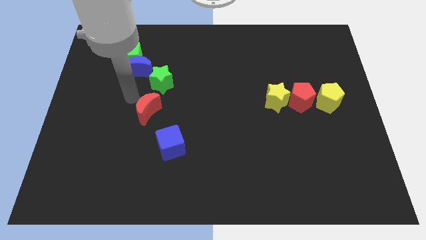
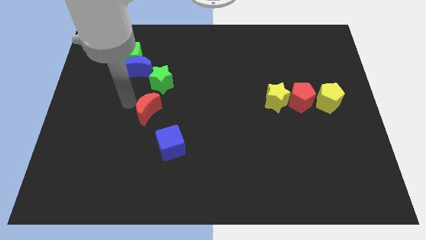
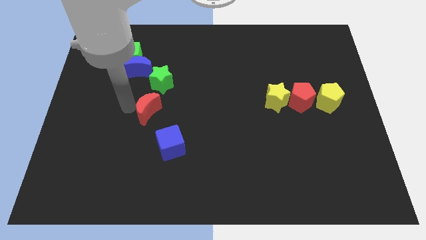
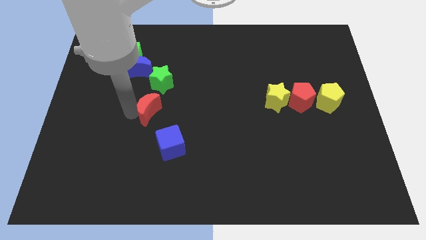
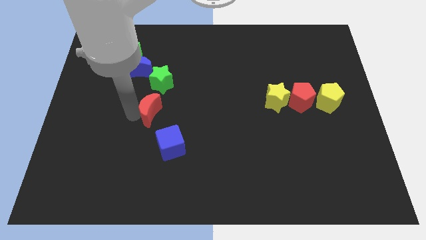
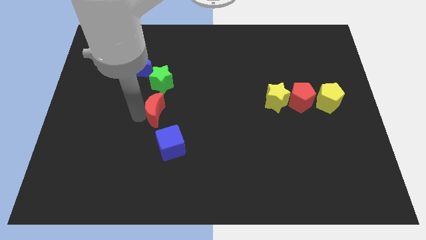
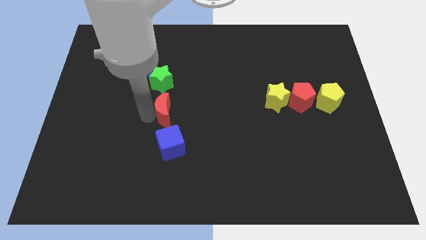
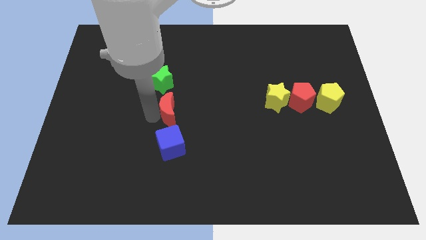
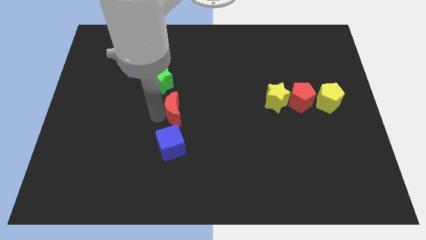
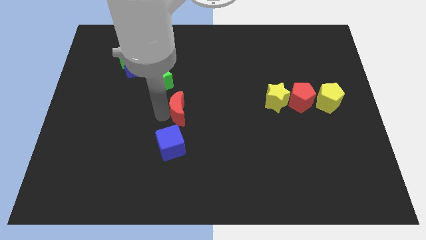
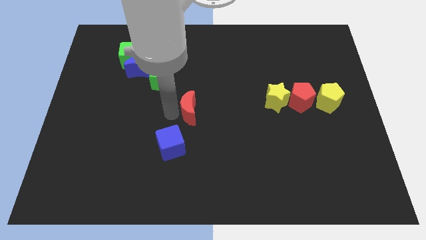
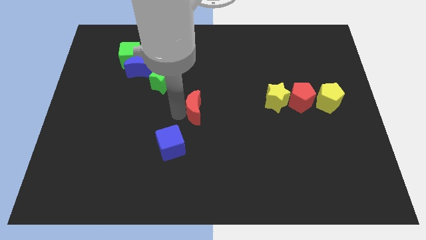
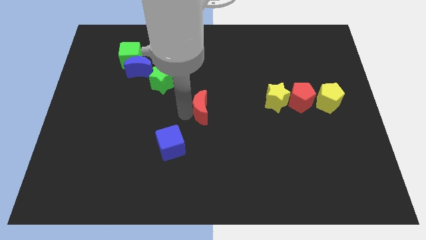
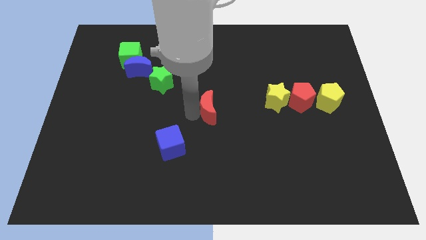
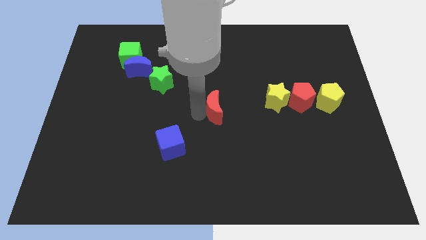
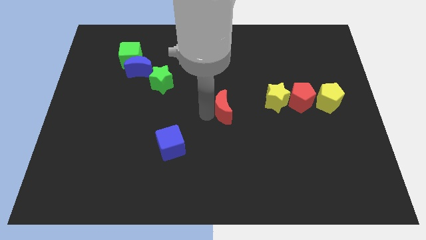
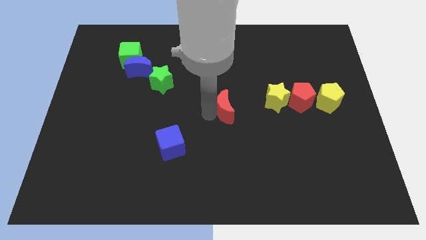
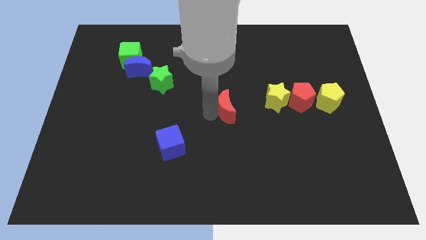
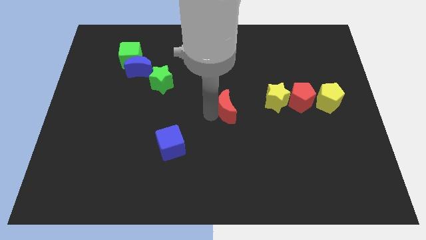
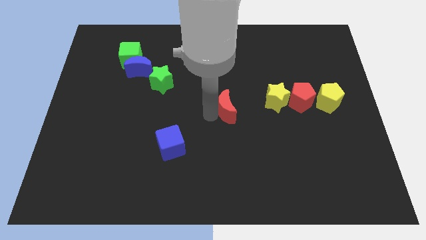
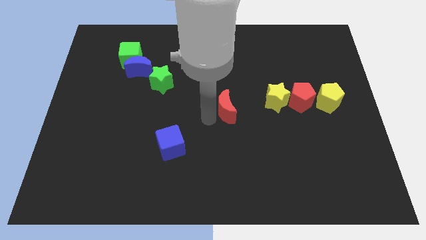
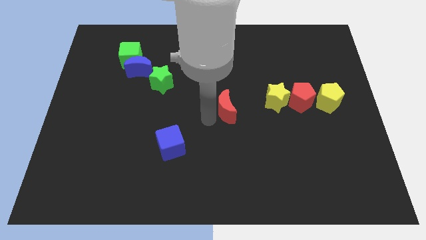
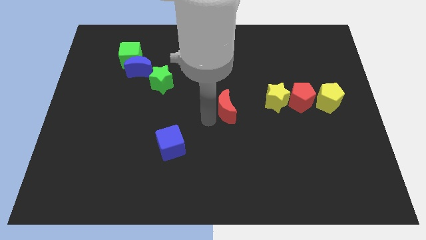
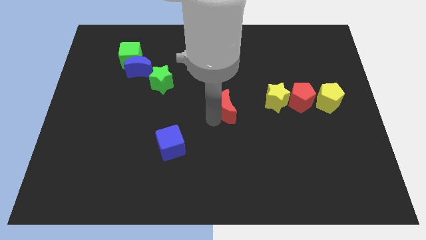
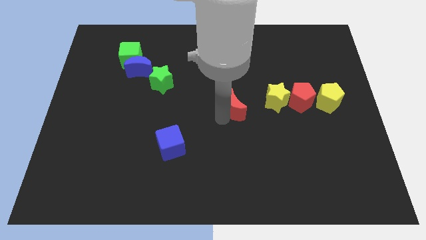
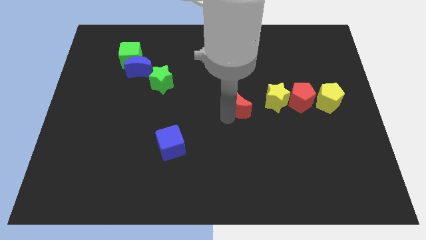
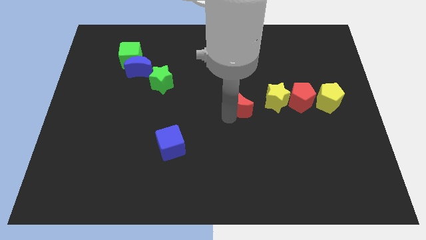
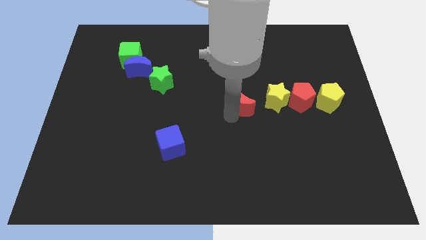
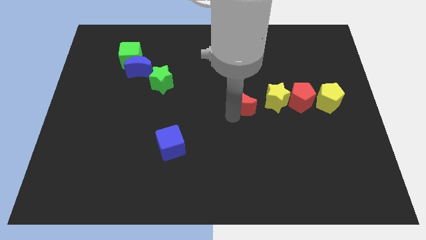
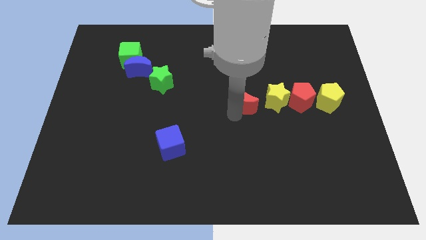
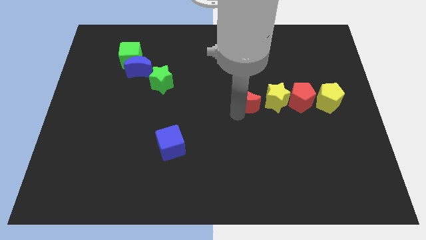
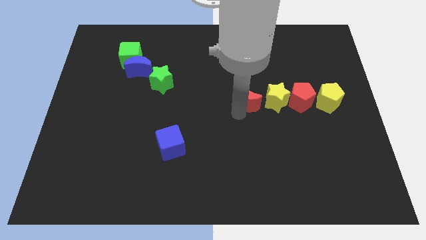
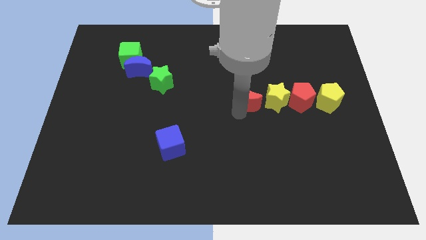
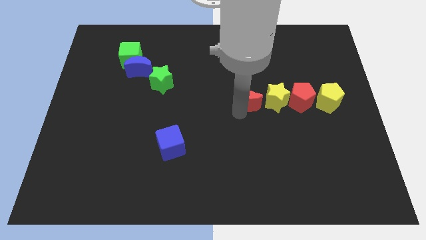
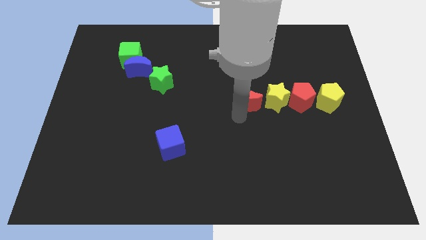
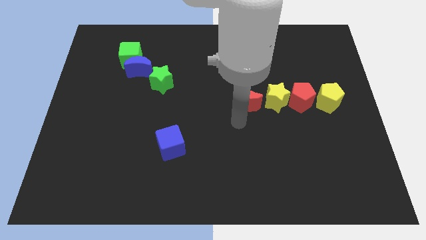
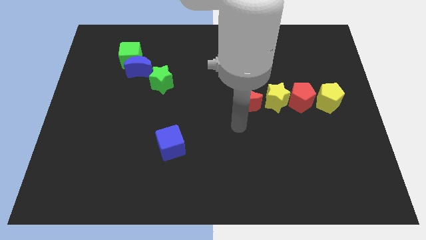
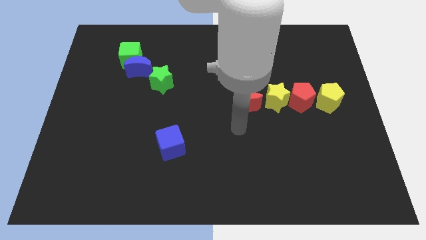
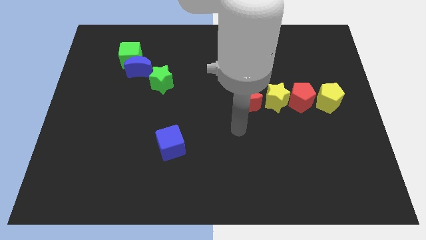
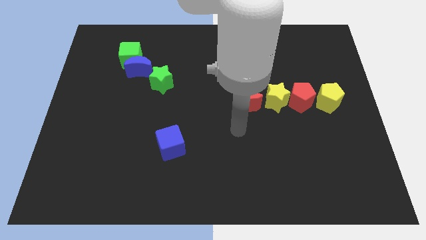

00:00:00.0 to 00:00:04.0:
place the red moon to the left of the yellow star

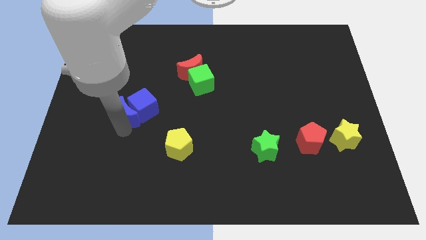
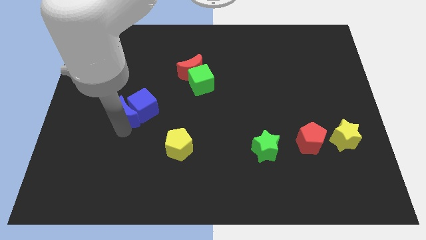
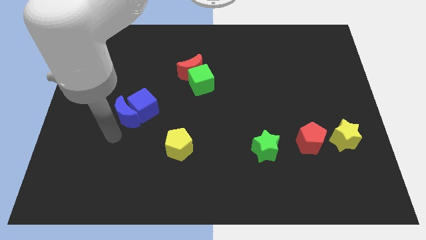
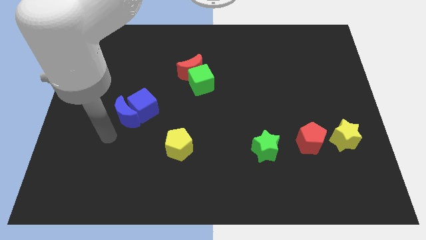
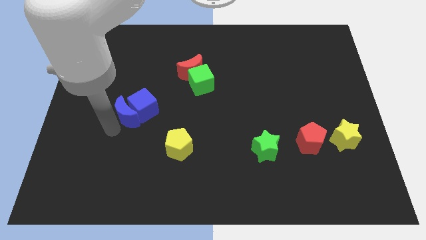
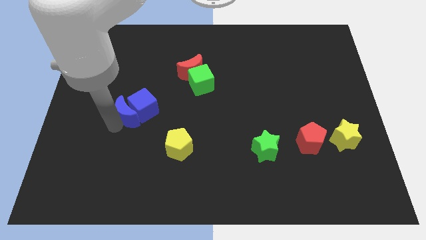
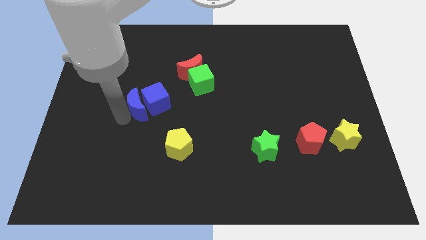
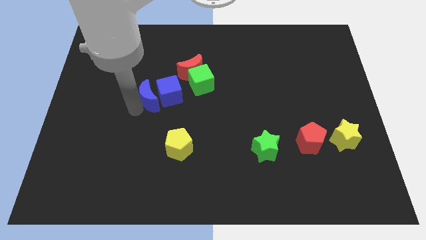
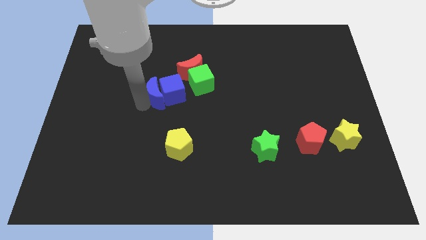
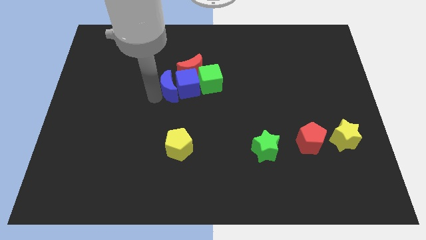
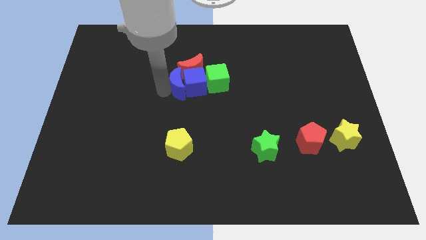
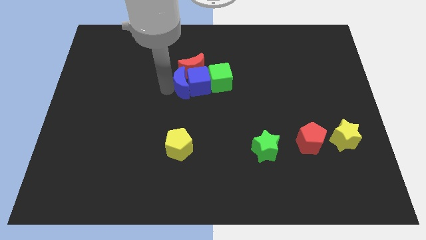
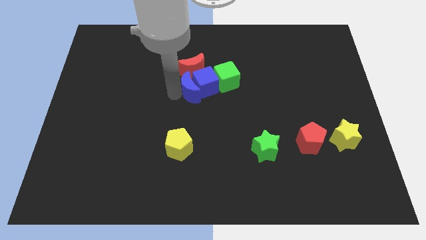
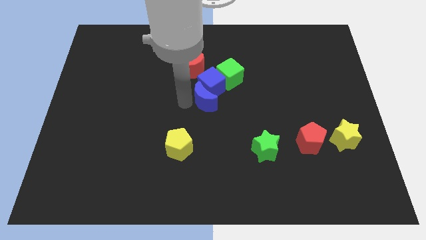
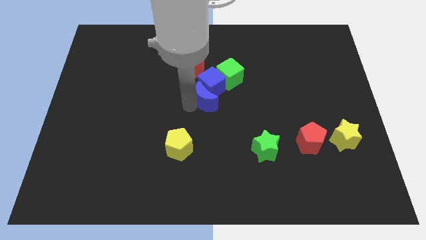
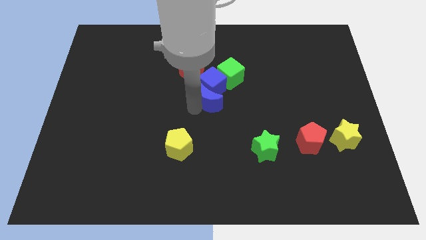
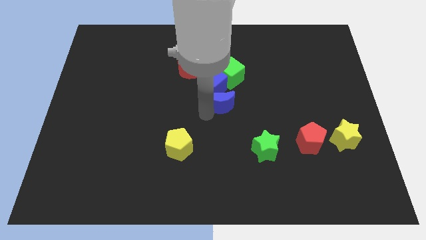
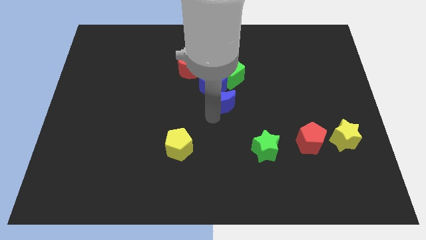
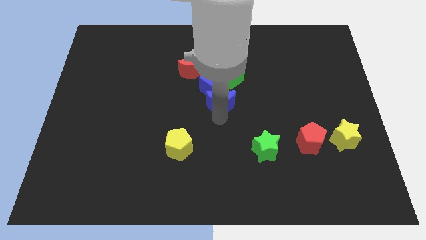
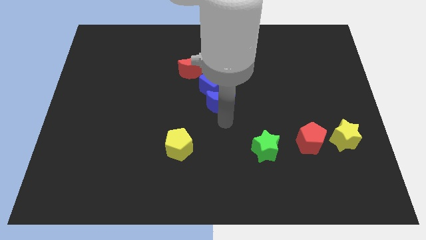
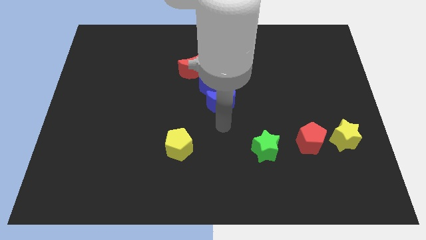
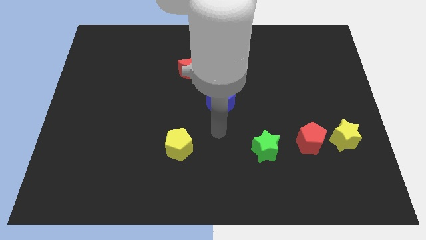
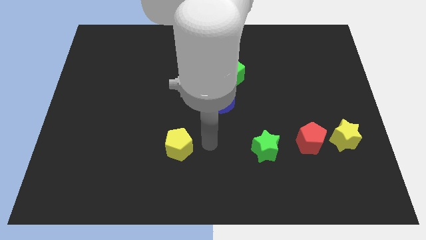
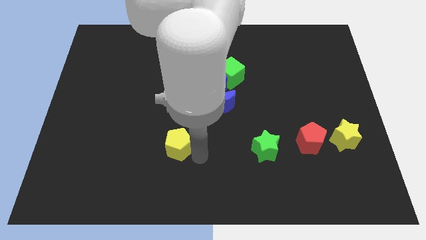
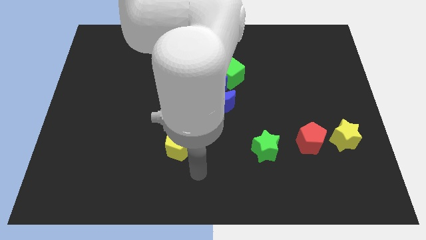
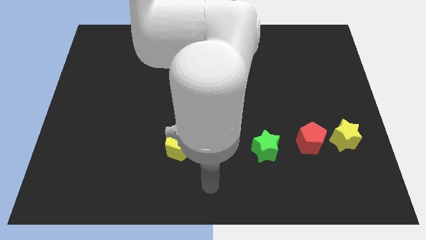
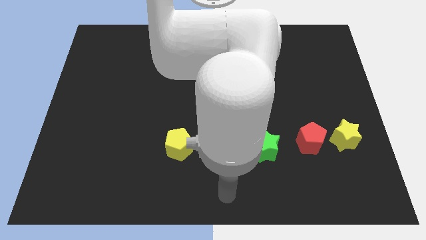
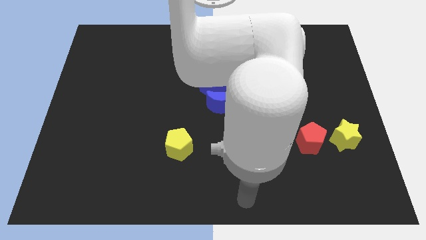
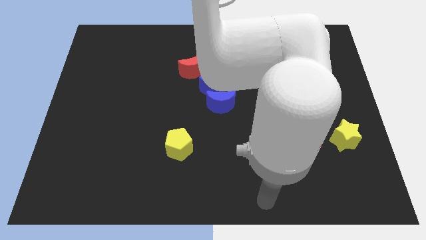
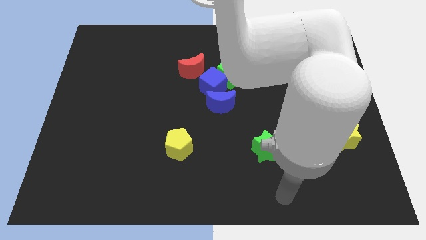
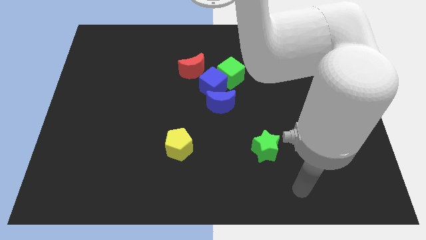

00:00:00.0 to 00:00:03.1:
place both the blue block at the center of the board

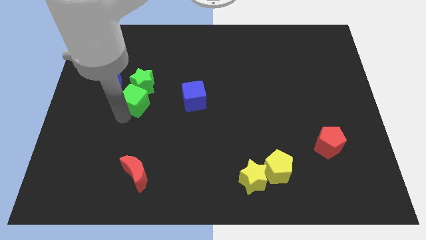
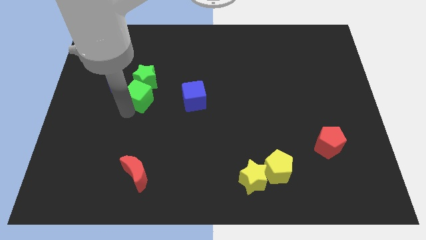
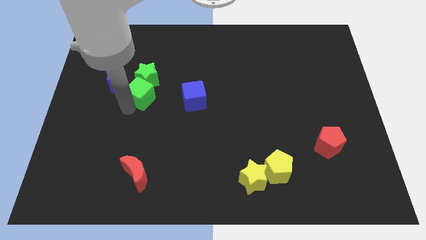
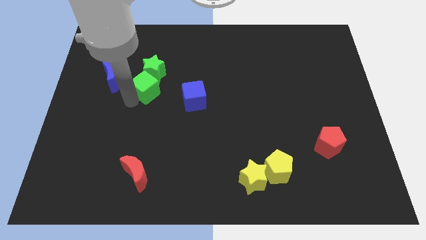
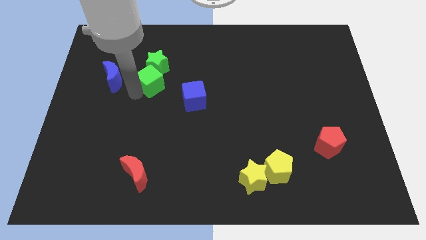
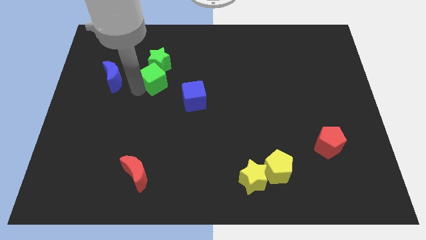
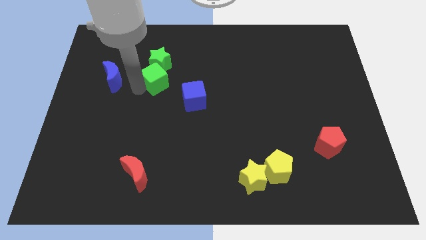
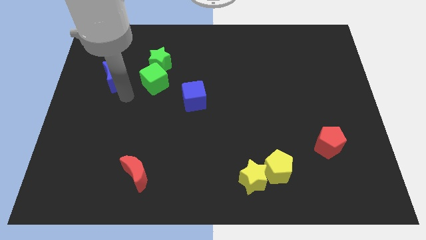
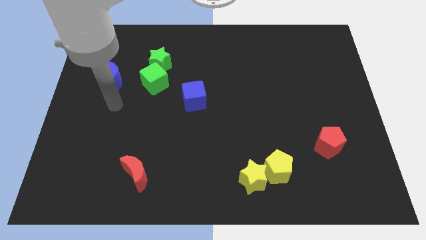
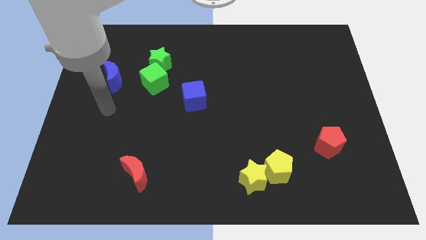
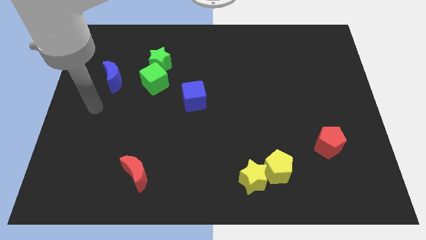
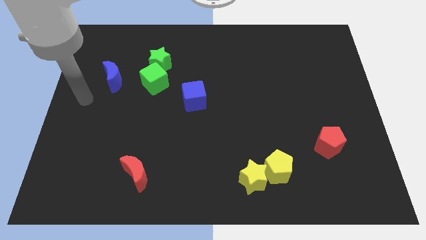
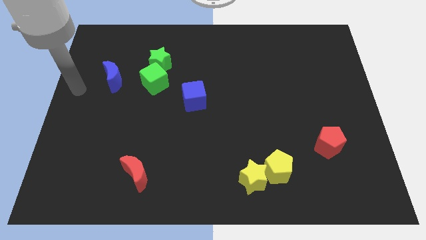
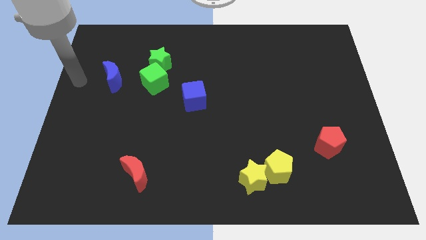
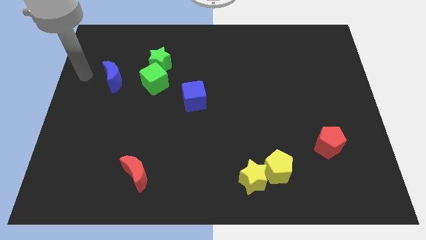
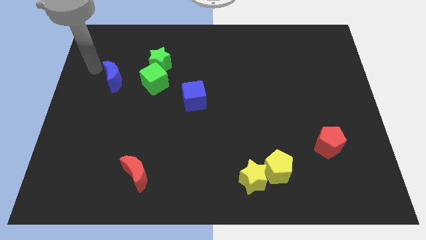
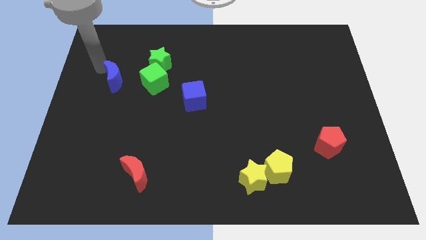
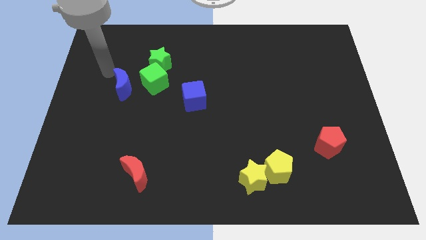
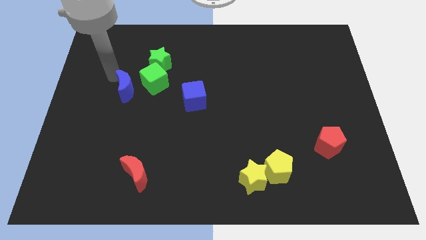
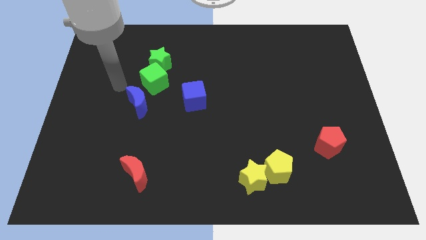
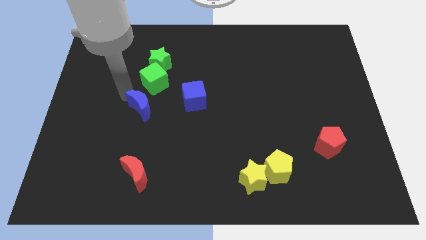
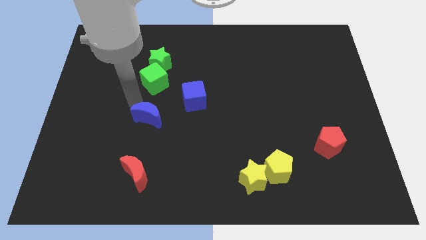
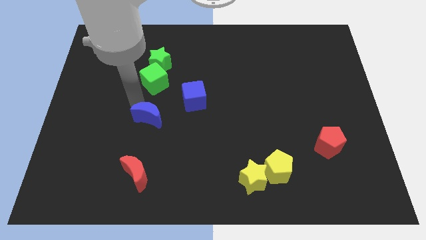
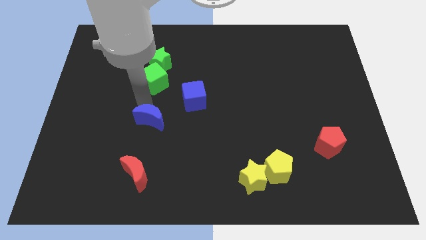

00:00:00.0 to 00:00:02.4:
place blue crescent below green cube
